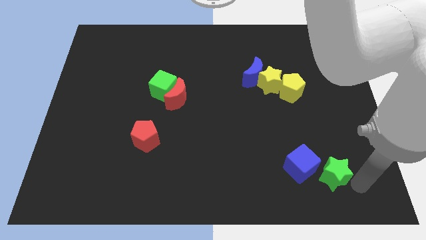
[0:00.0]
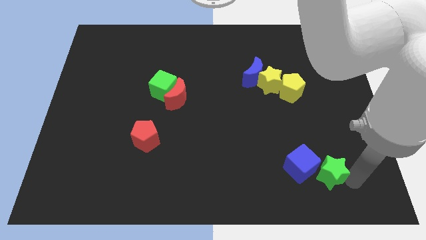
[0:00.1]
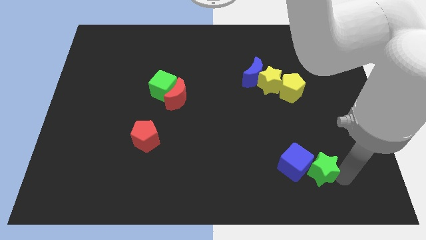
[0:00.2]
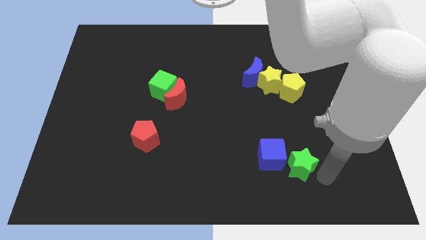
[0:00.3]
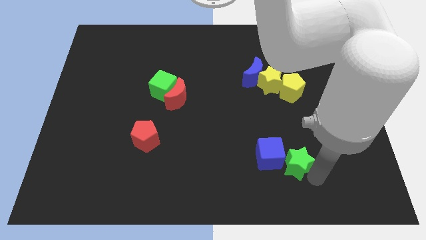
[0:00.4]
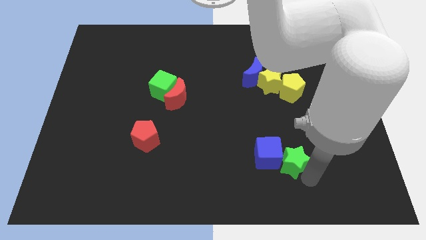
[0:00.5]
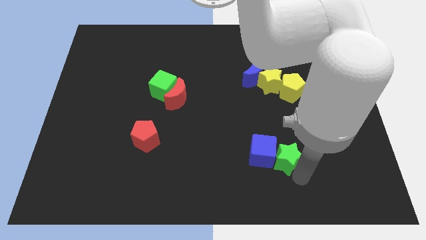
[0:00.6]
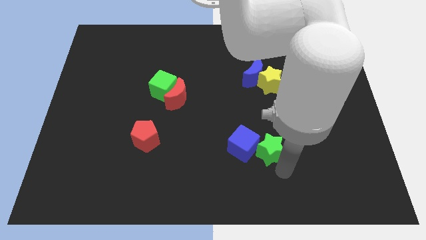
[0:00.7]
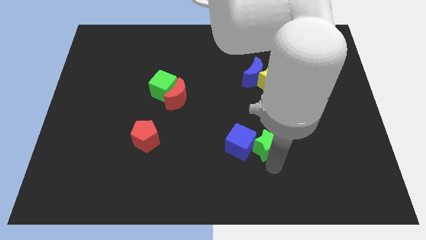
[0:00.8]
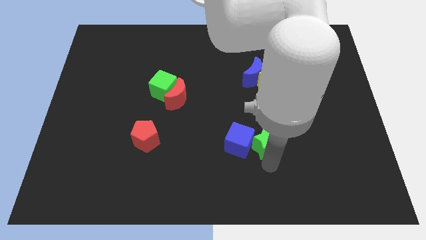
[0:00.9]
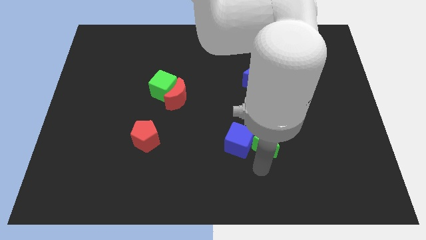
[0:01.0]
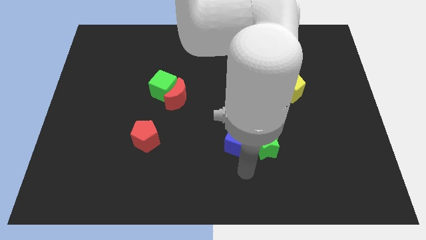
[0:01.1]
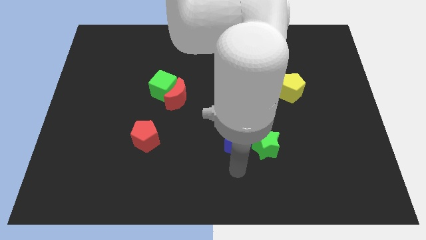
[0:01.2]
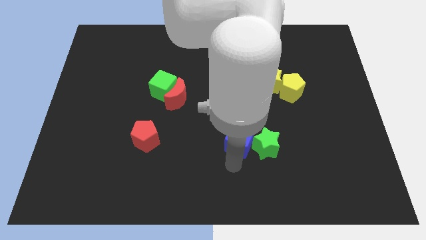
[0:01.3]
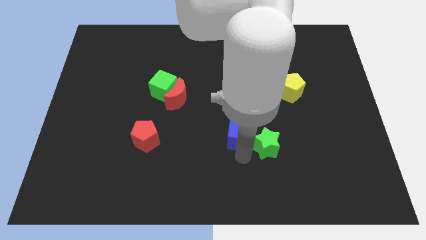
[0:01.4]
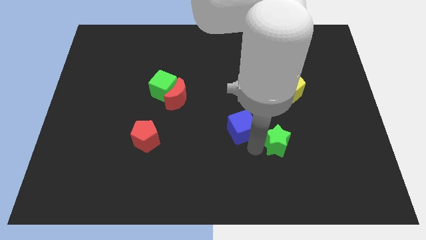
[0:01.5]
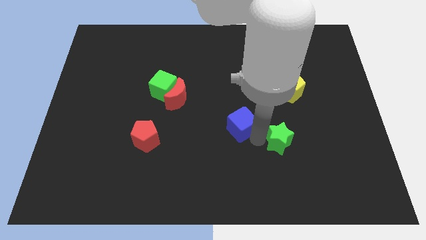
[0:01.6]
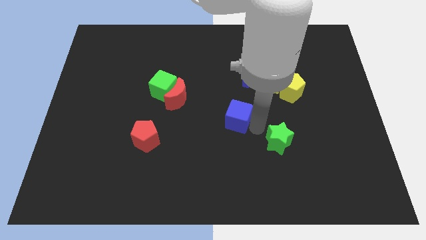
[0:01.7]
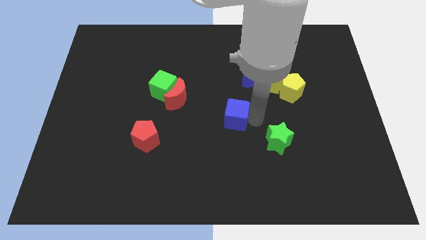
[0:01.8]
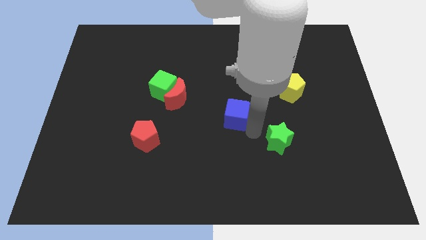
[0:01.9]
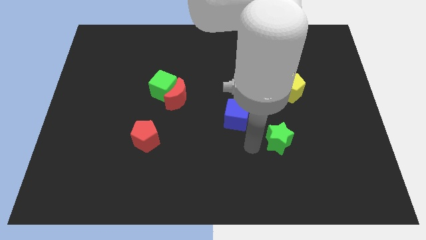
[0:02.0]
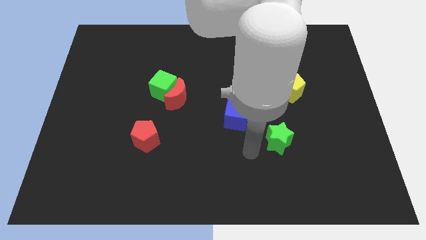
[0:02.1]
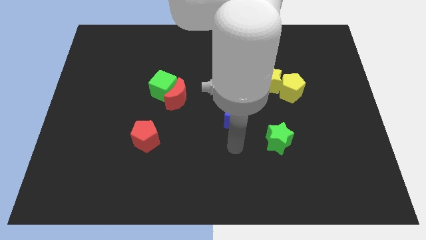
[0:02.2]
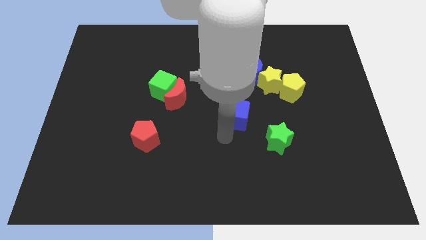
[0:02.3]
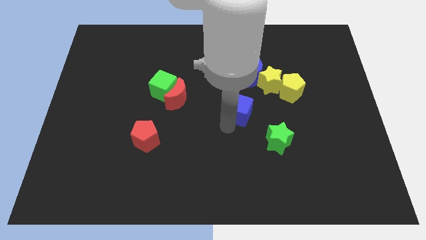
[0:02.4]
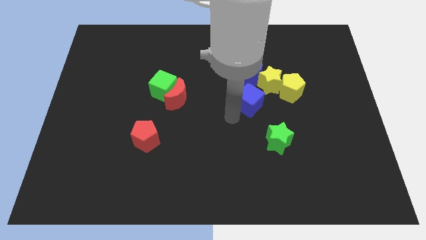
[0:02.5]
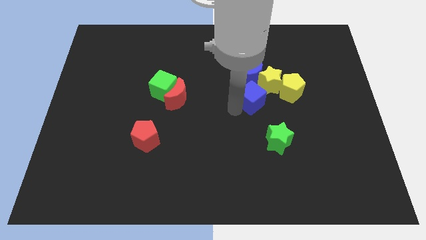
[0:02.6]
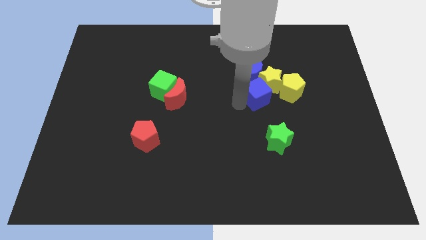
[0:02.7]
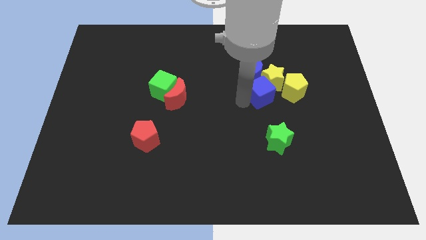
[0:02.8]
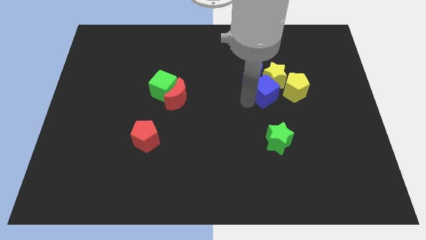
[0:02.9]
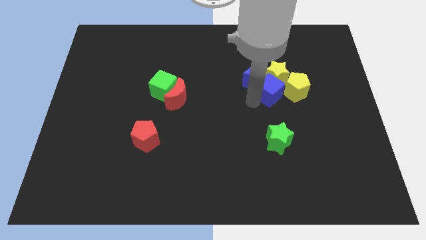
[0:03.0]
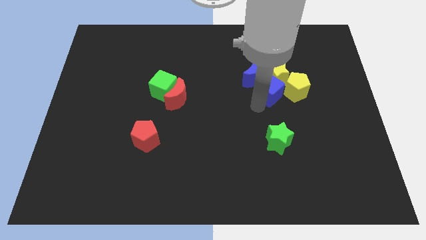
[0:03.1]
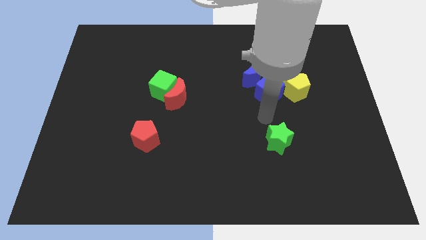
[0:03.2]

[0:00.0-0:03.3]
push the blue cube close to the yellow star

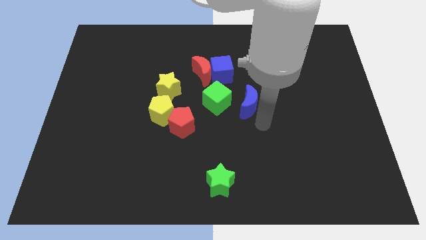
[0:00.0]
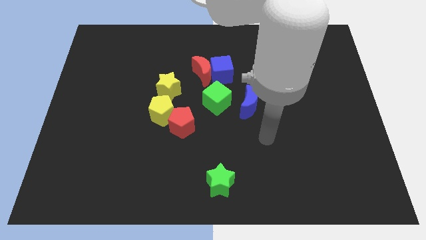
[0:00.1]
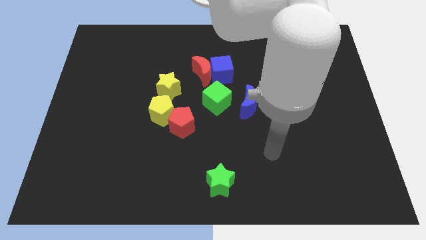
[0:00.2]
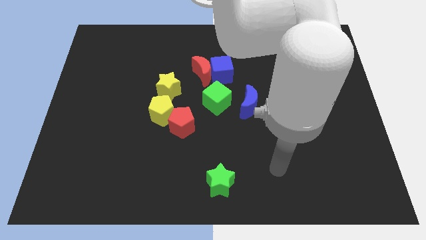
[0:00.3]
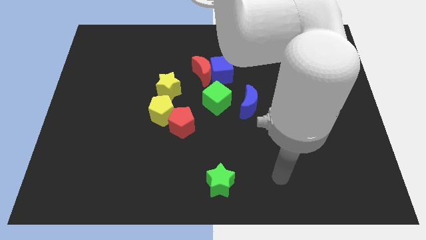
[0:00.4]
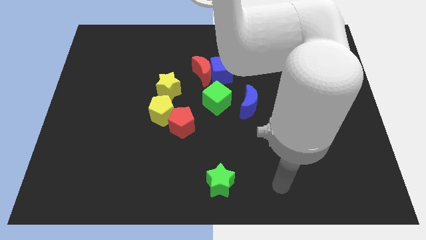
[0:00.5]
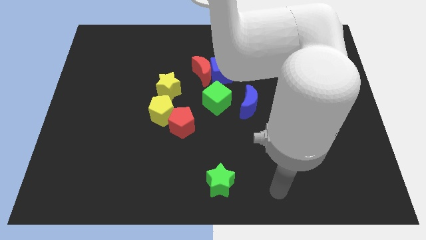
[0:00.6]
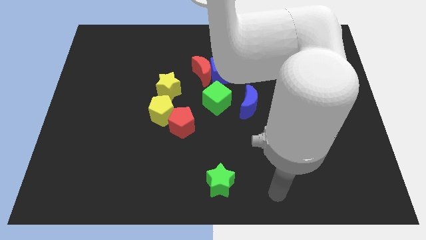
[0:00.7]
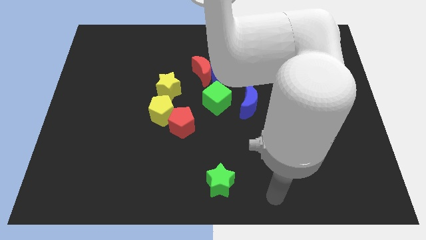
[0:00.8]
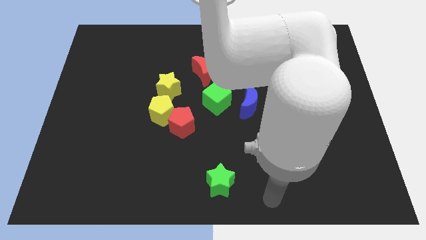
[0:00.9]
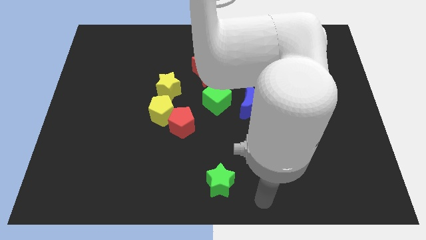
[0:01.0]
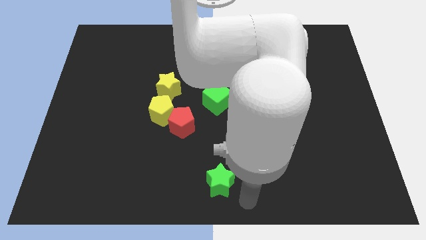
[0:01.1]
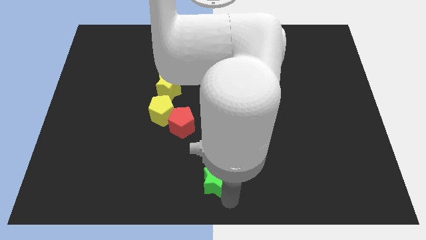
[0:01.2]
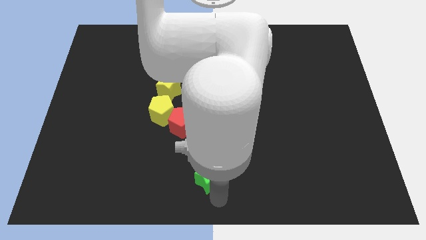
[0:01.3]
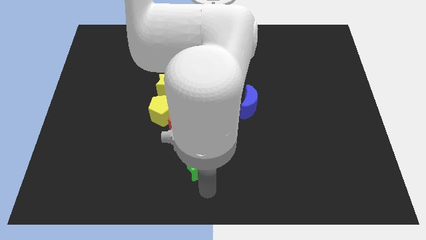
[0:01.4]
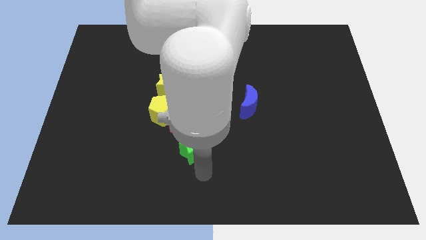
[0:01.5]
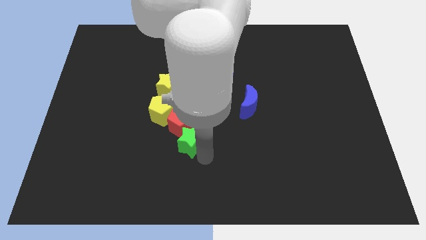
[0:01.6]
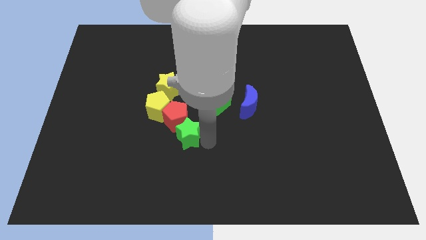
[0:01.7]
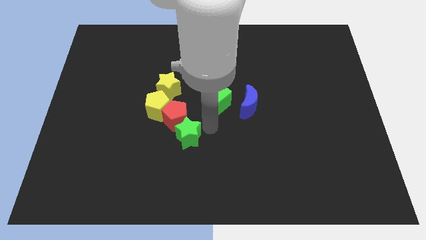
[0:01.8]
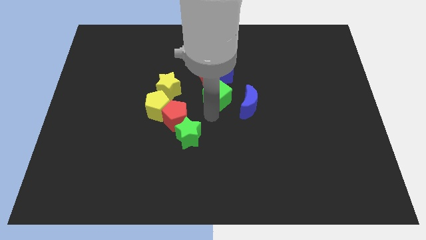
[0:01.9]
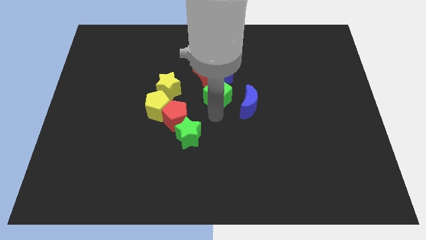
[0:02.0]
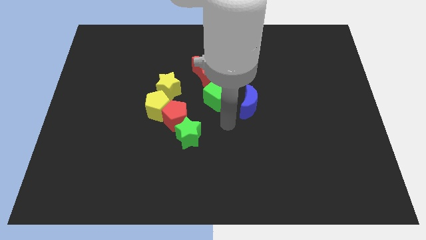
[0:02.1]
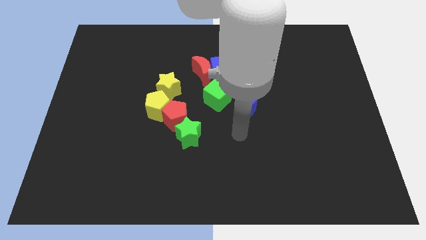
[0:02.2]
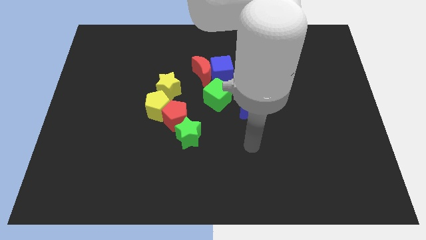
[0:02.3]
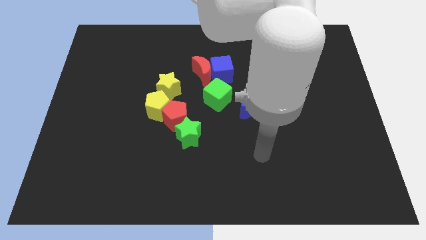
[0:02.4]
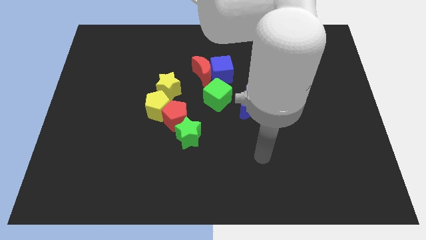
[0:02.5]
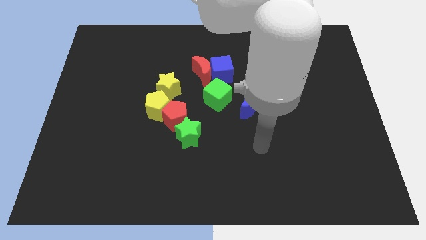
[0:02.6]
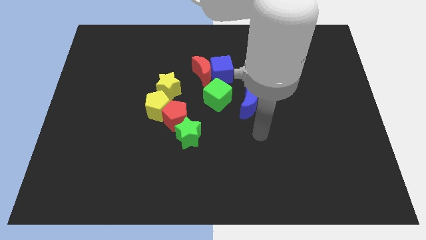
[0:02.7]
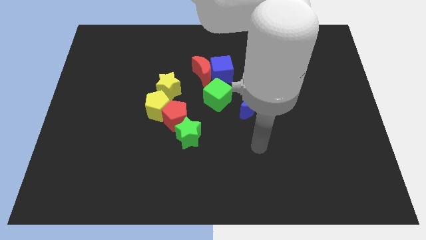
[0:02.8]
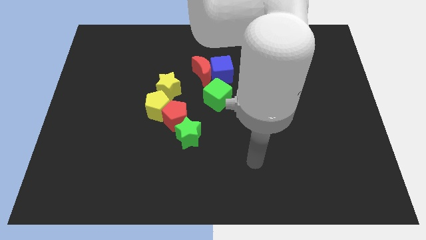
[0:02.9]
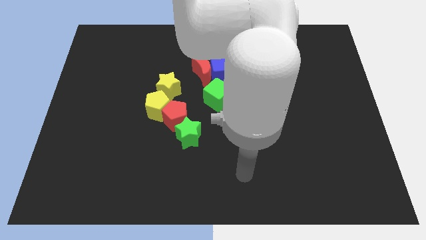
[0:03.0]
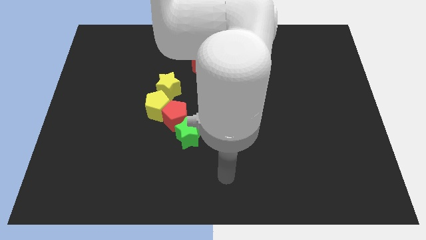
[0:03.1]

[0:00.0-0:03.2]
push the green star into the red pentagon

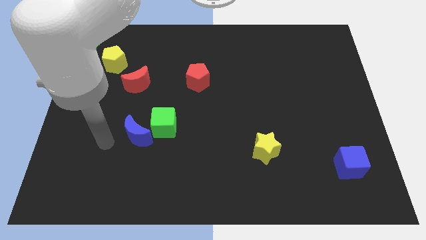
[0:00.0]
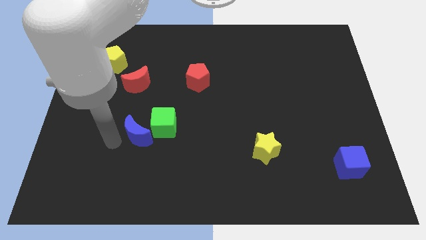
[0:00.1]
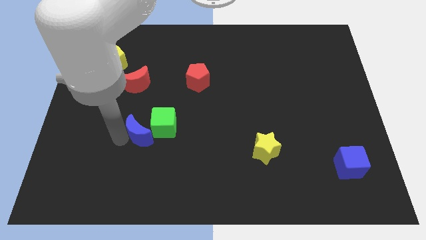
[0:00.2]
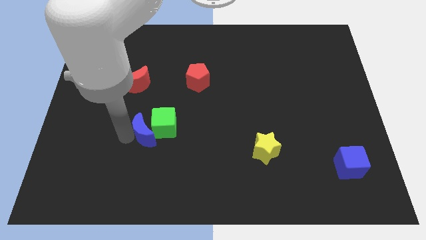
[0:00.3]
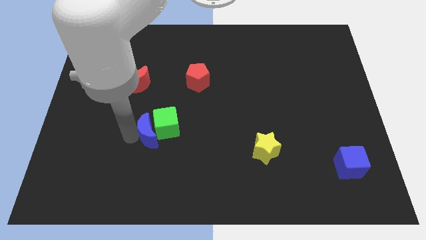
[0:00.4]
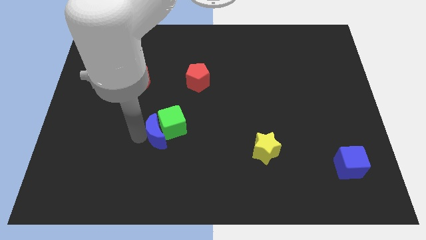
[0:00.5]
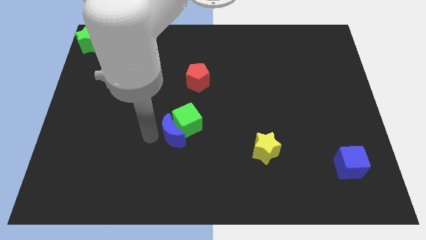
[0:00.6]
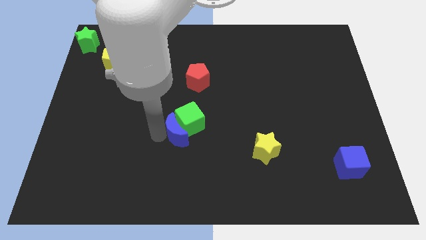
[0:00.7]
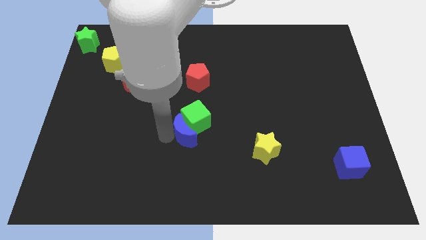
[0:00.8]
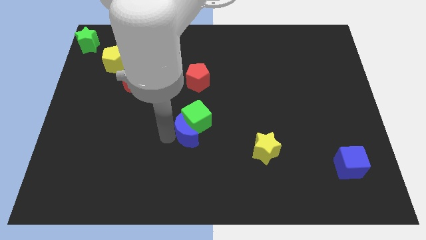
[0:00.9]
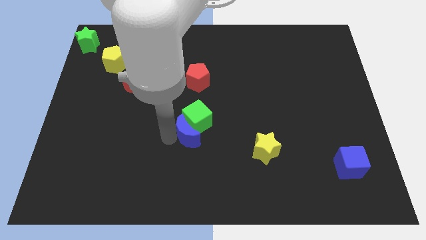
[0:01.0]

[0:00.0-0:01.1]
push the blue crescent into the green cube

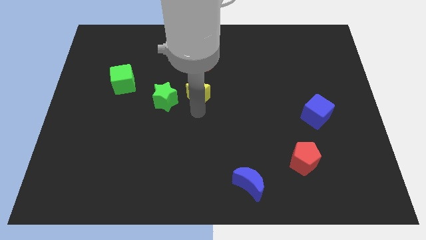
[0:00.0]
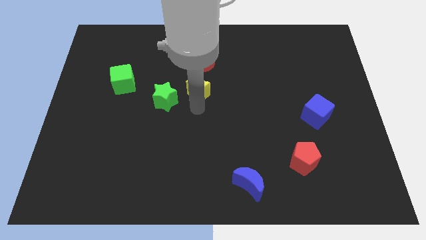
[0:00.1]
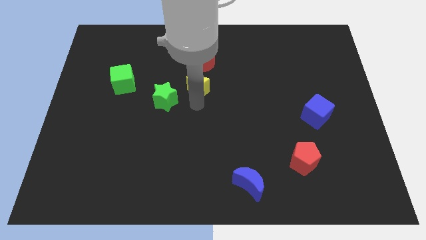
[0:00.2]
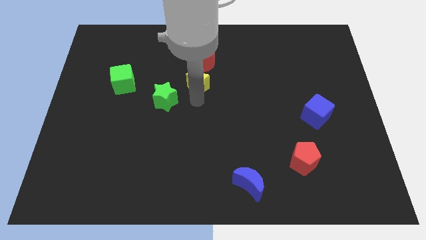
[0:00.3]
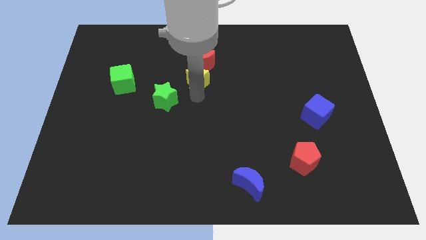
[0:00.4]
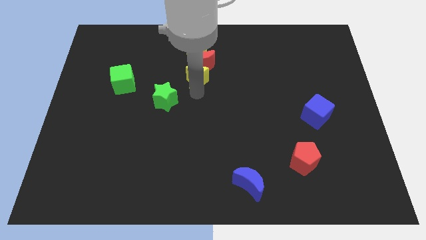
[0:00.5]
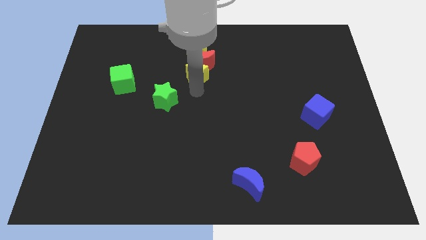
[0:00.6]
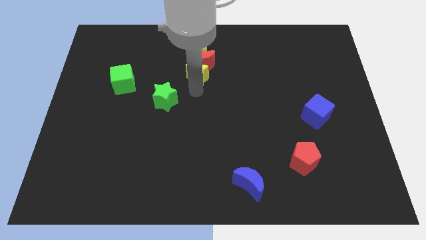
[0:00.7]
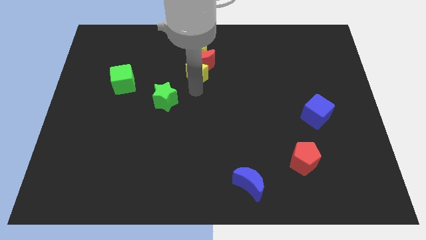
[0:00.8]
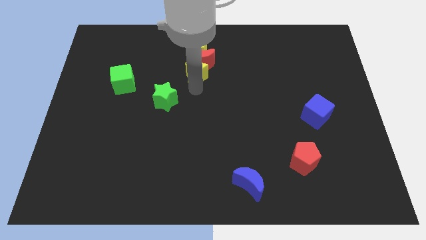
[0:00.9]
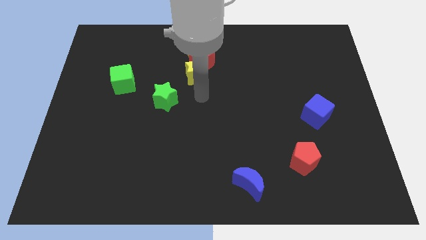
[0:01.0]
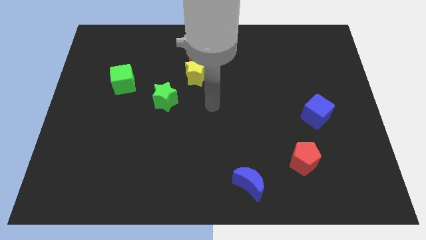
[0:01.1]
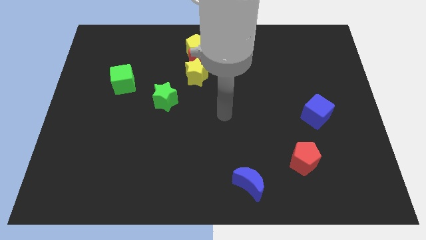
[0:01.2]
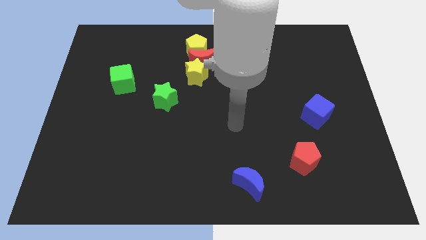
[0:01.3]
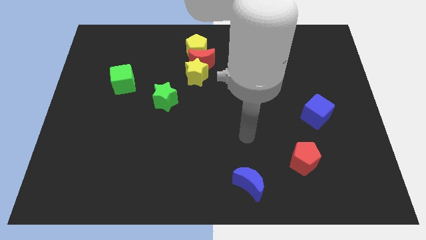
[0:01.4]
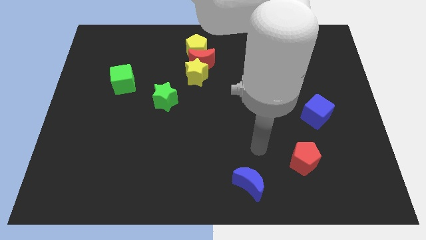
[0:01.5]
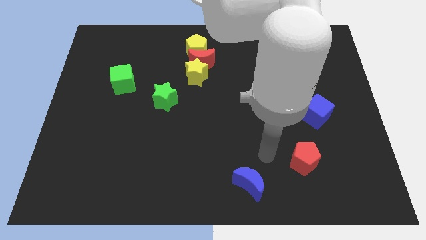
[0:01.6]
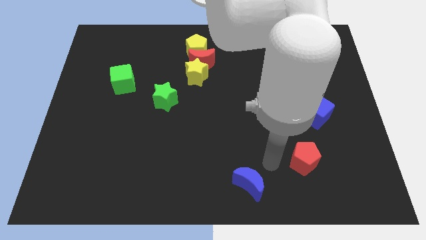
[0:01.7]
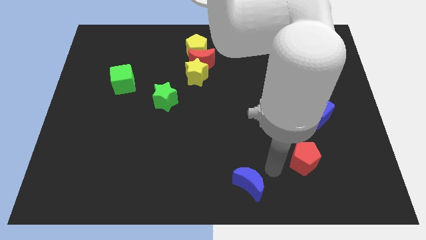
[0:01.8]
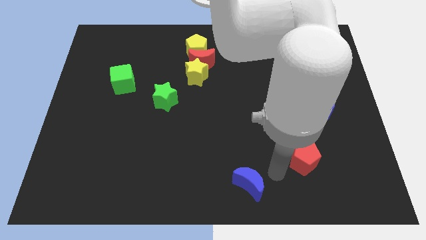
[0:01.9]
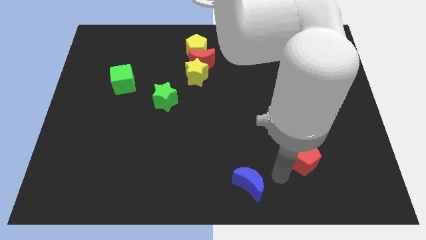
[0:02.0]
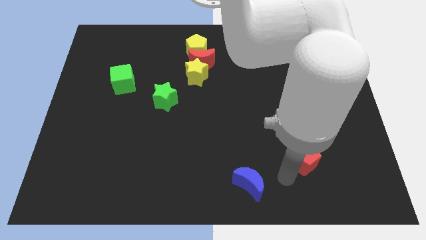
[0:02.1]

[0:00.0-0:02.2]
move the yellow star diagonally to the green star
